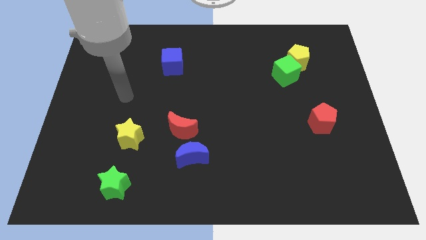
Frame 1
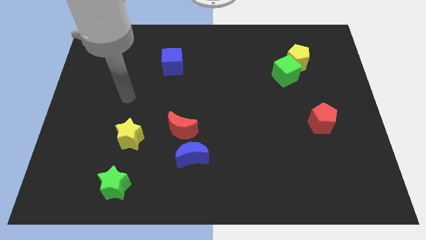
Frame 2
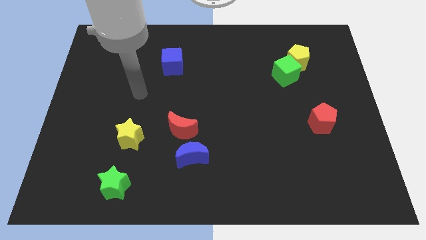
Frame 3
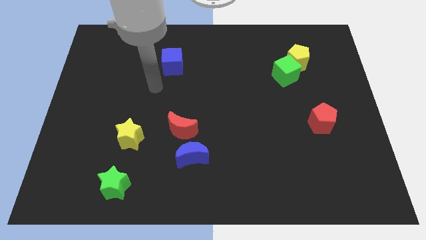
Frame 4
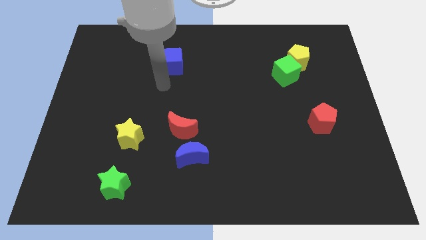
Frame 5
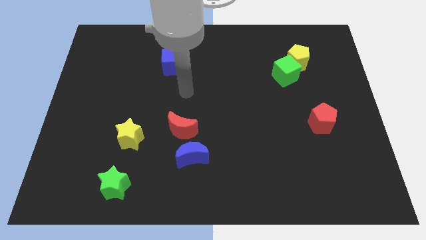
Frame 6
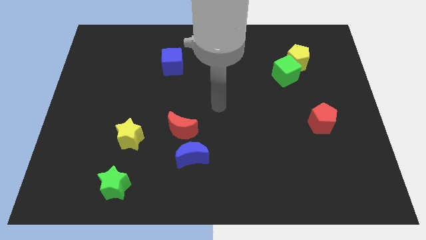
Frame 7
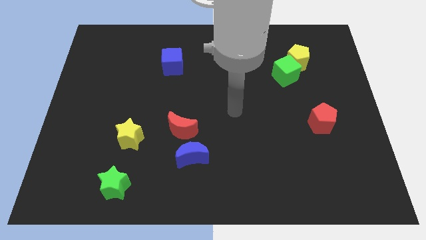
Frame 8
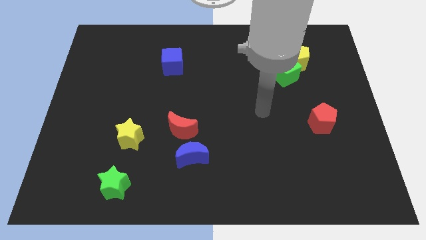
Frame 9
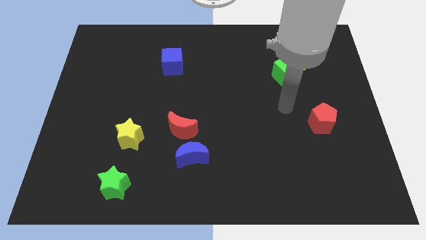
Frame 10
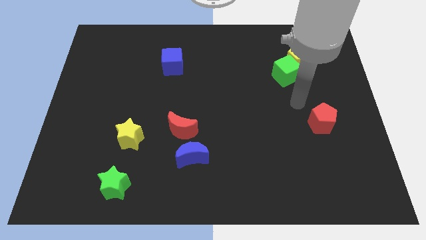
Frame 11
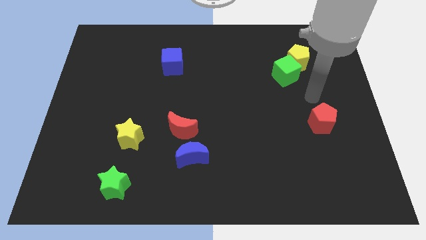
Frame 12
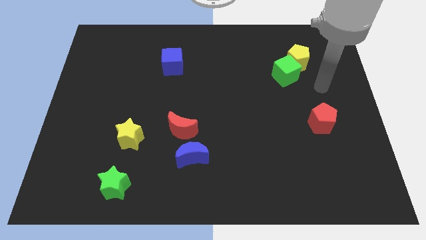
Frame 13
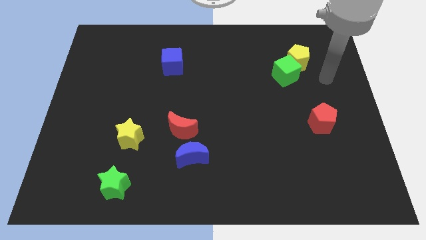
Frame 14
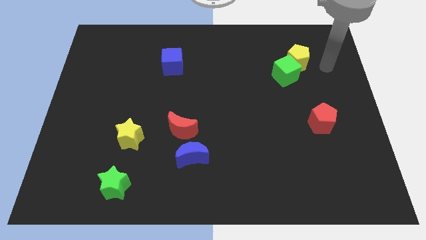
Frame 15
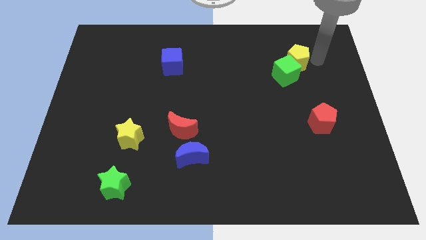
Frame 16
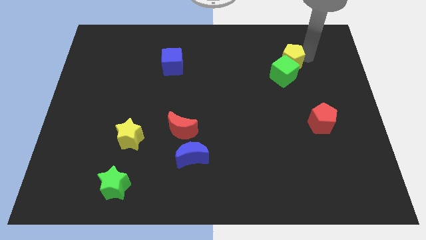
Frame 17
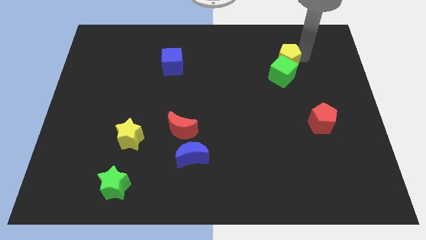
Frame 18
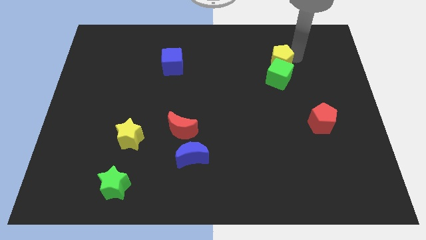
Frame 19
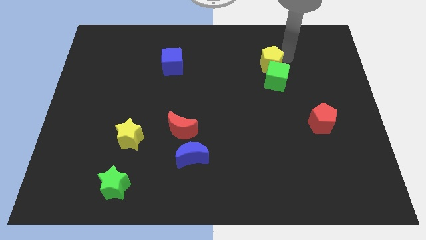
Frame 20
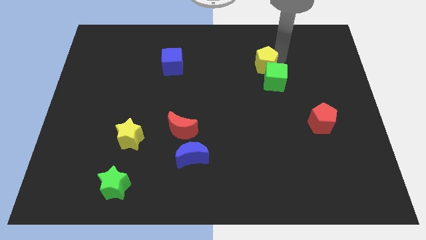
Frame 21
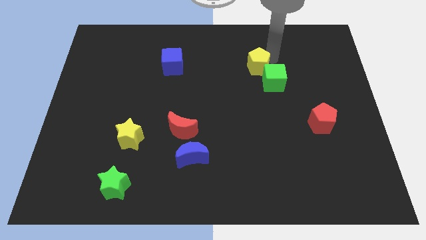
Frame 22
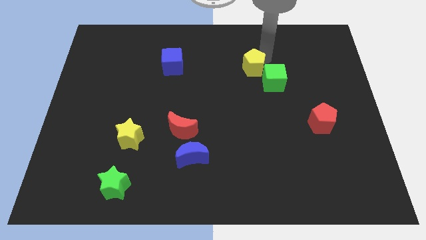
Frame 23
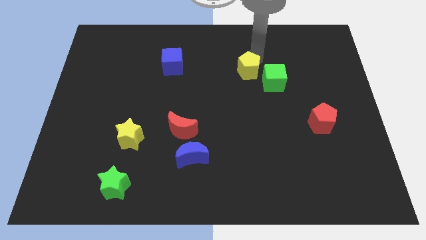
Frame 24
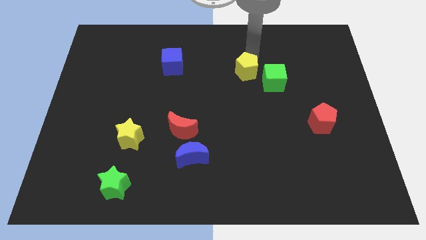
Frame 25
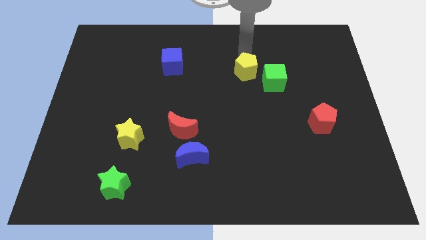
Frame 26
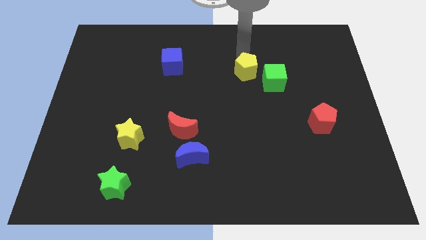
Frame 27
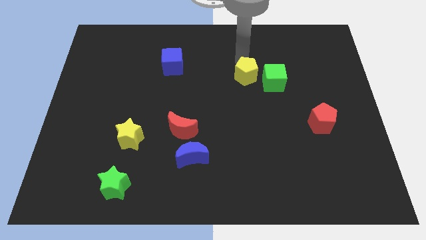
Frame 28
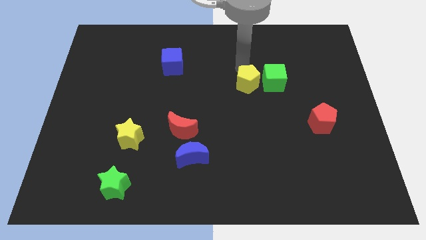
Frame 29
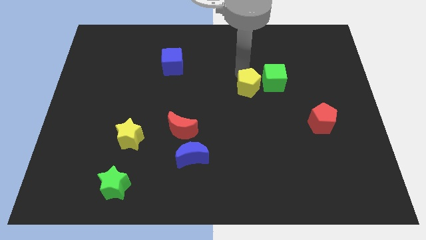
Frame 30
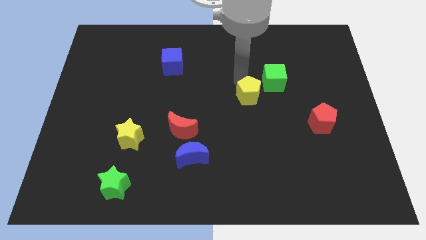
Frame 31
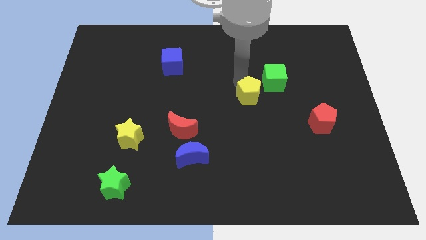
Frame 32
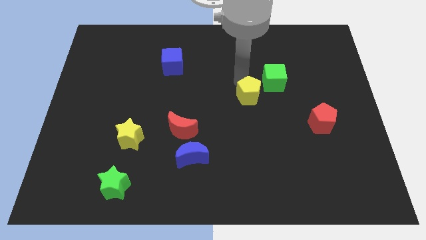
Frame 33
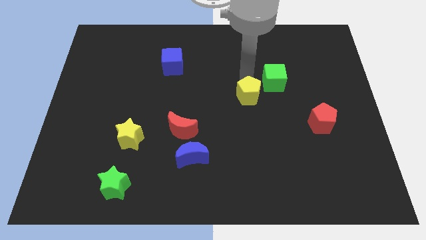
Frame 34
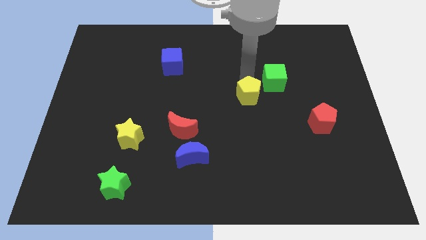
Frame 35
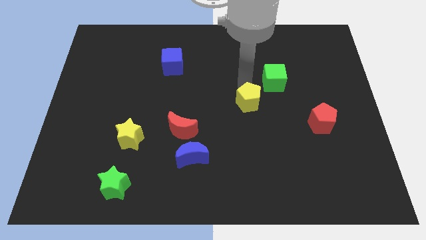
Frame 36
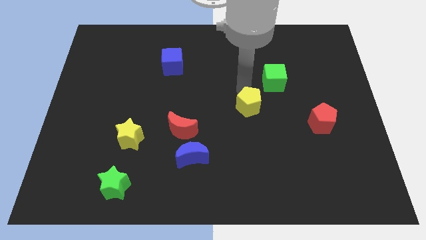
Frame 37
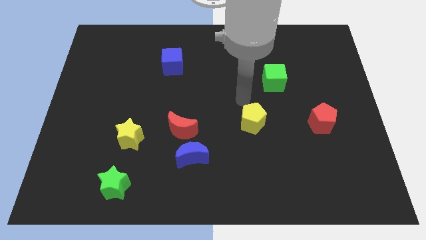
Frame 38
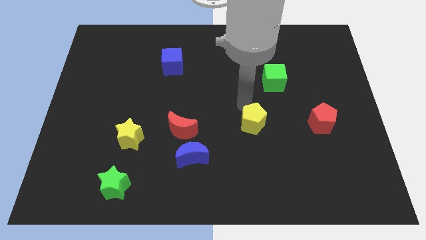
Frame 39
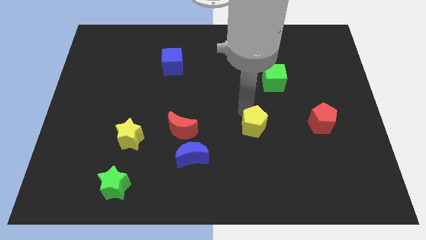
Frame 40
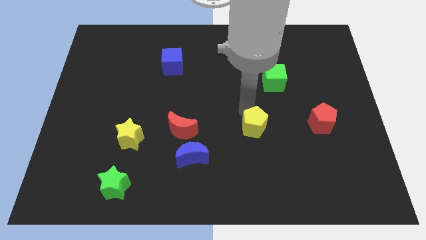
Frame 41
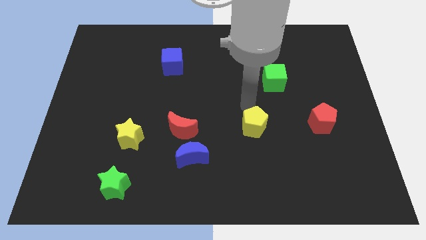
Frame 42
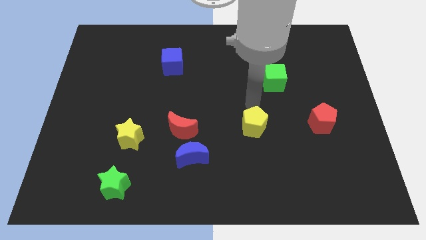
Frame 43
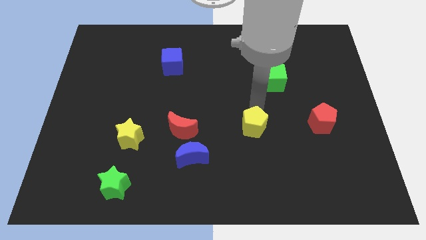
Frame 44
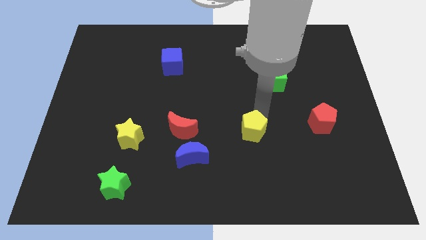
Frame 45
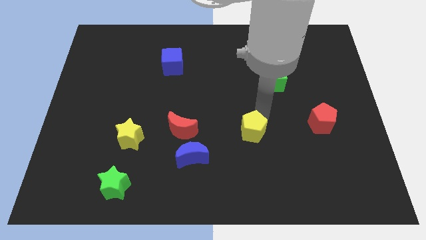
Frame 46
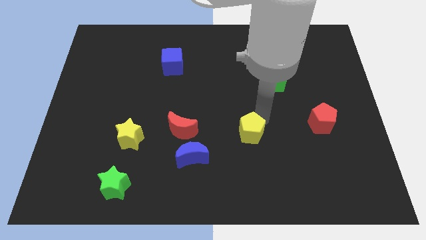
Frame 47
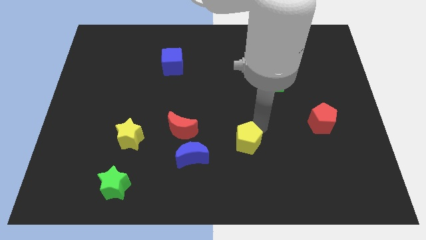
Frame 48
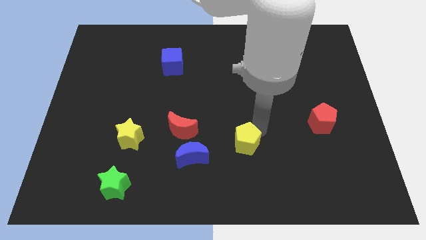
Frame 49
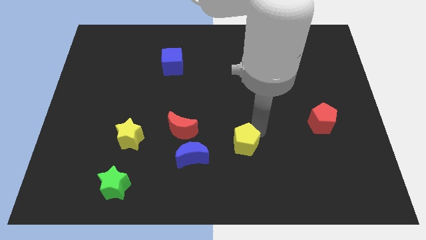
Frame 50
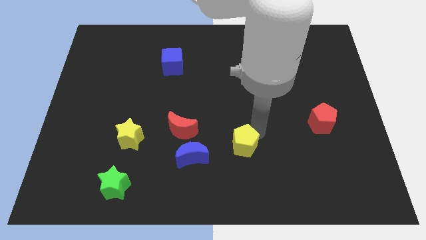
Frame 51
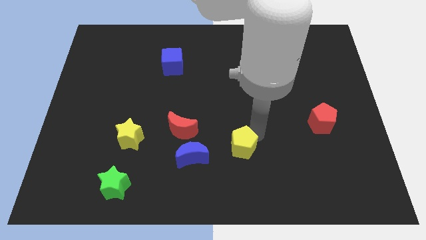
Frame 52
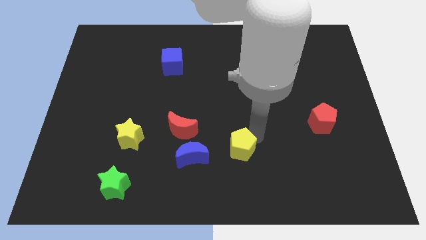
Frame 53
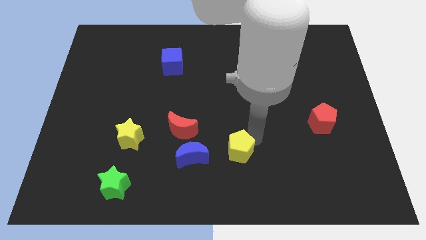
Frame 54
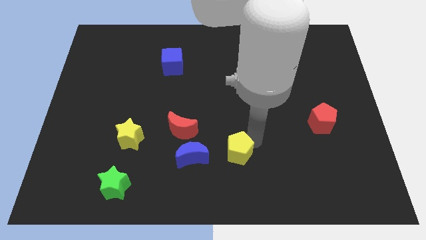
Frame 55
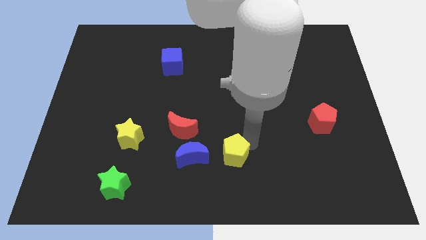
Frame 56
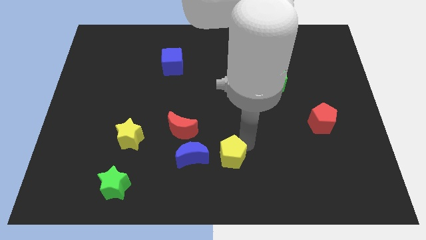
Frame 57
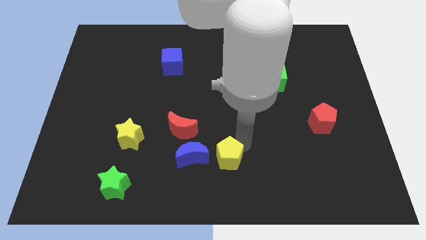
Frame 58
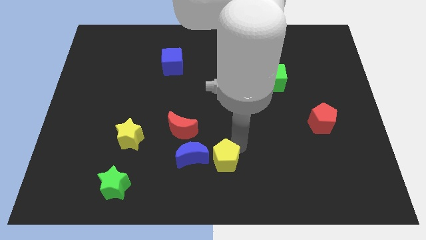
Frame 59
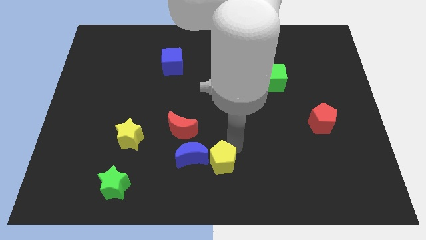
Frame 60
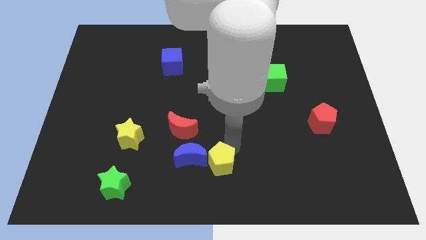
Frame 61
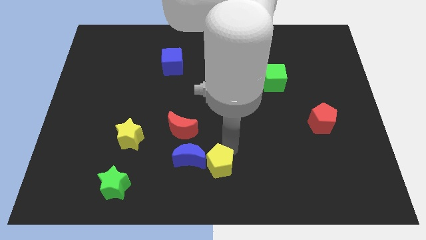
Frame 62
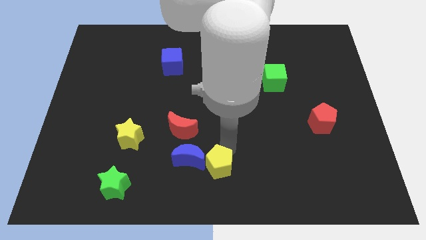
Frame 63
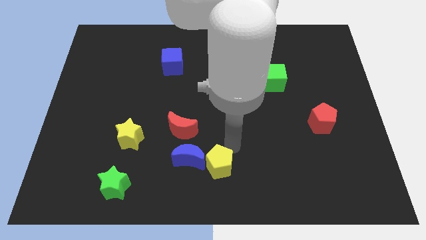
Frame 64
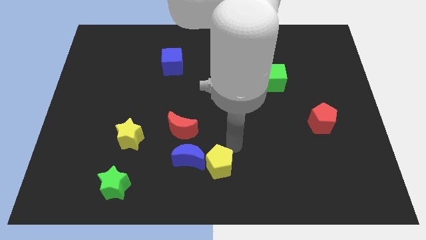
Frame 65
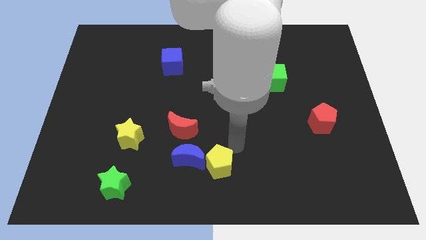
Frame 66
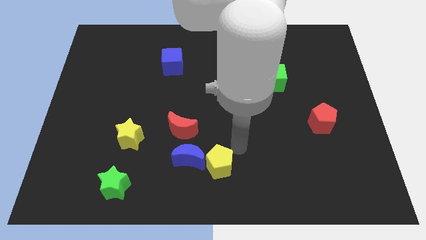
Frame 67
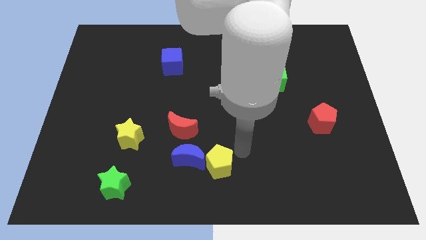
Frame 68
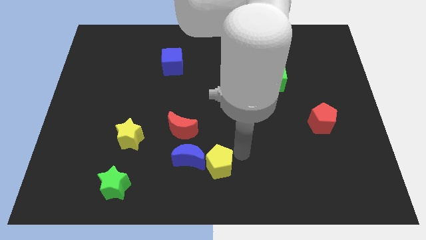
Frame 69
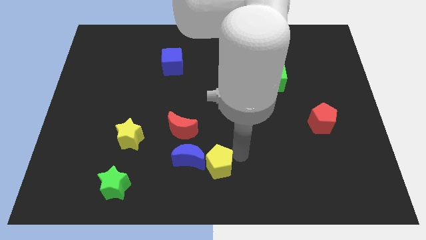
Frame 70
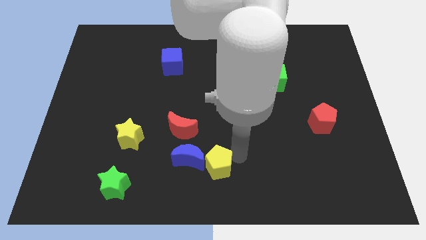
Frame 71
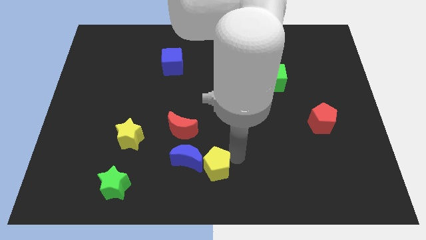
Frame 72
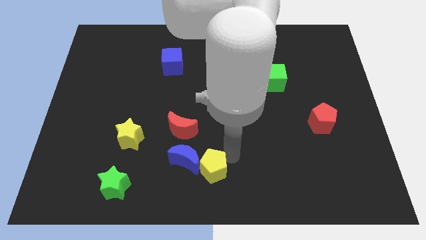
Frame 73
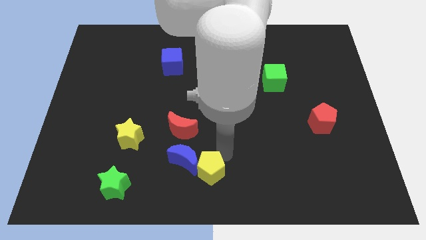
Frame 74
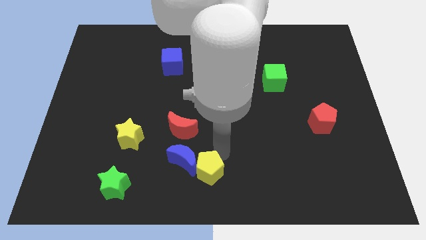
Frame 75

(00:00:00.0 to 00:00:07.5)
slide the yellow pentagon close to the blue moon

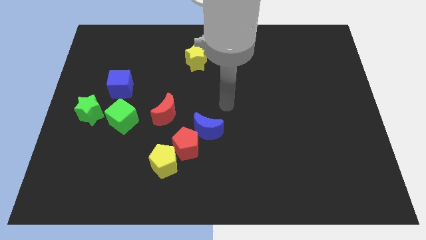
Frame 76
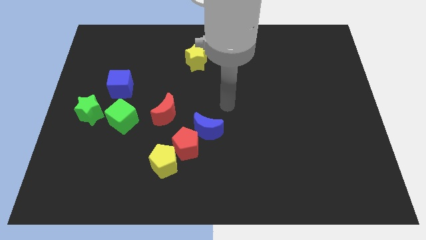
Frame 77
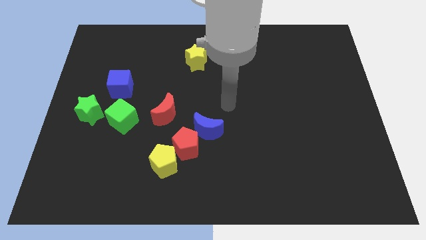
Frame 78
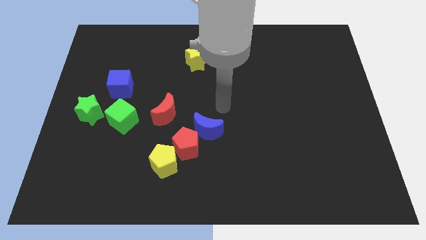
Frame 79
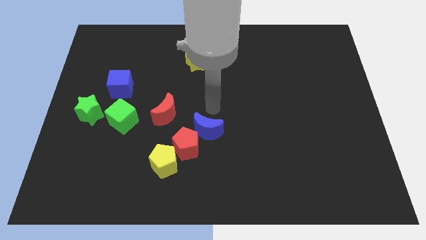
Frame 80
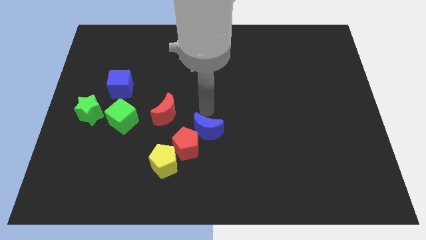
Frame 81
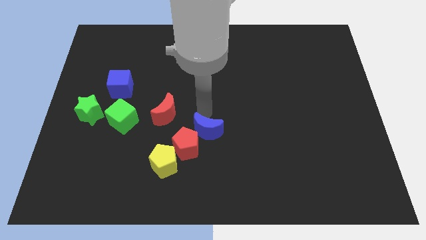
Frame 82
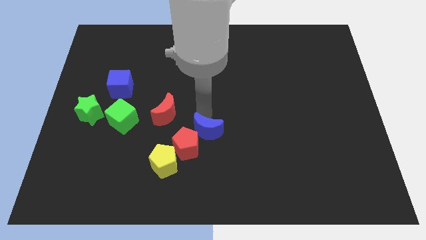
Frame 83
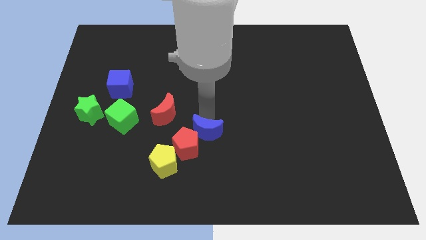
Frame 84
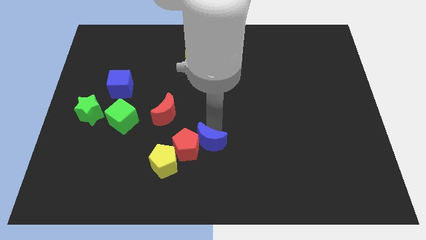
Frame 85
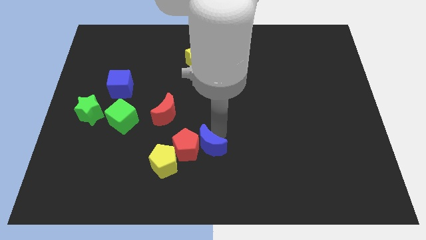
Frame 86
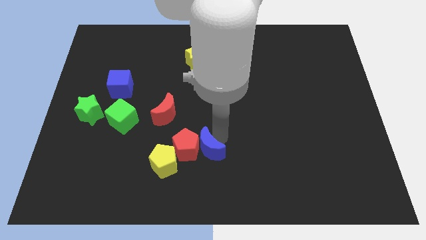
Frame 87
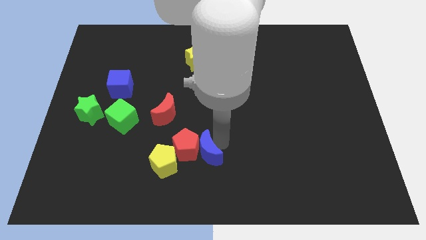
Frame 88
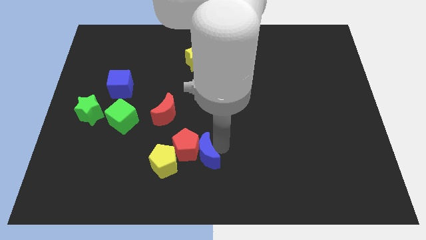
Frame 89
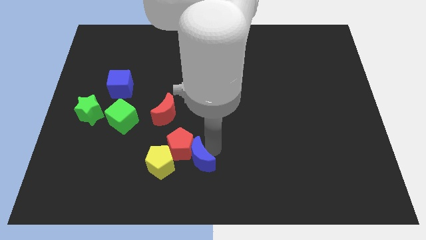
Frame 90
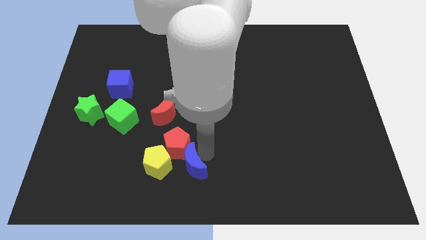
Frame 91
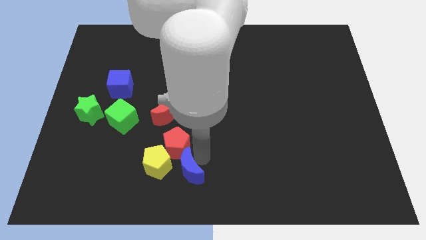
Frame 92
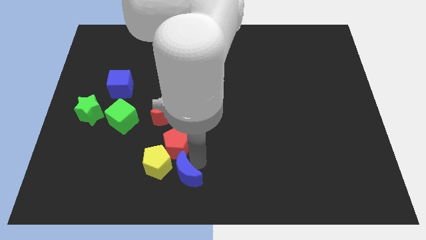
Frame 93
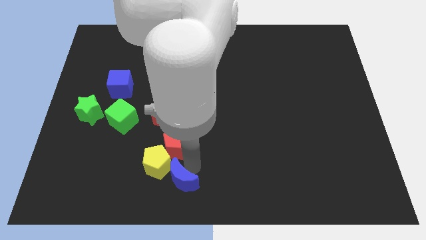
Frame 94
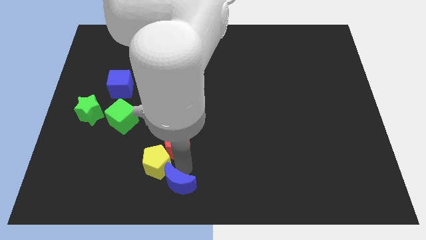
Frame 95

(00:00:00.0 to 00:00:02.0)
slide the blue moon towards the yellow pentagon
